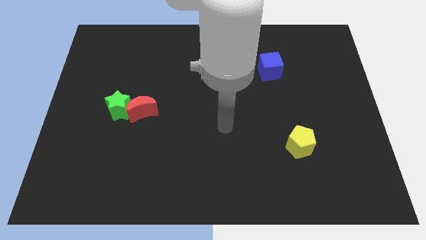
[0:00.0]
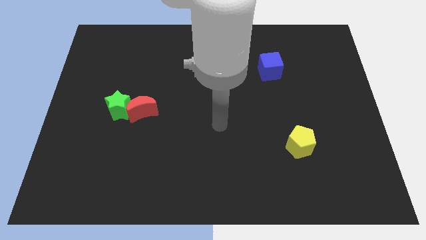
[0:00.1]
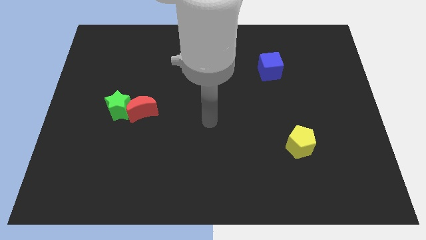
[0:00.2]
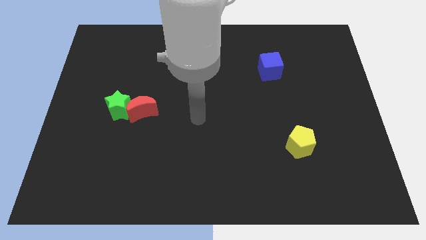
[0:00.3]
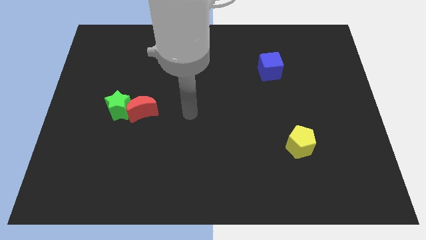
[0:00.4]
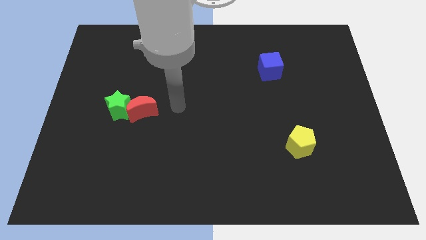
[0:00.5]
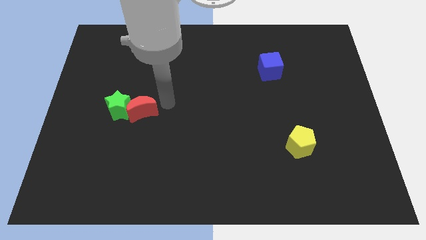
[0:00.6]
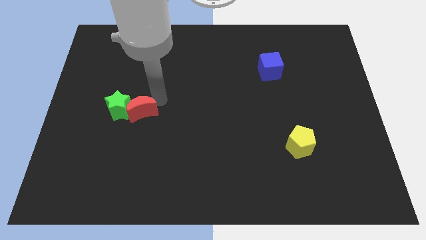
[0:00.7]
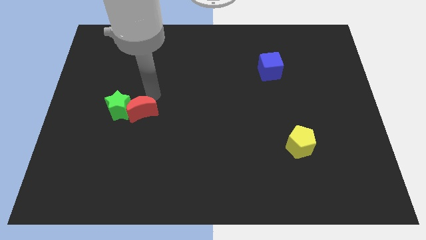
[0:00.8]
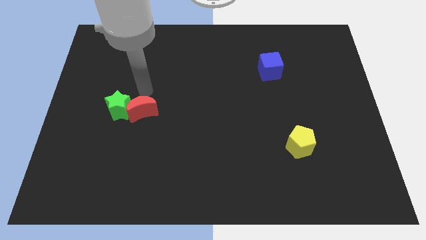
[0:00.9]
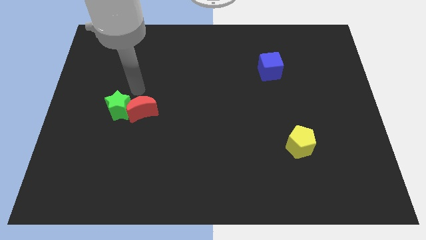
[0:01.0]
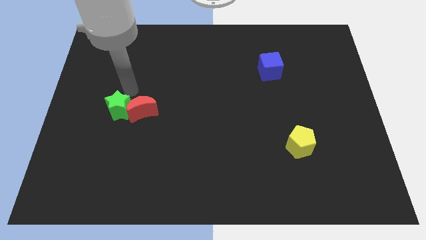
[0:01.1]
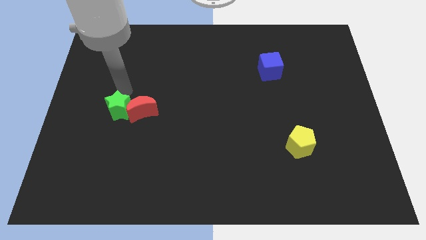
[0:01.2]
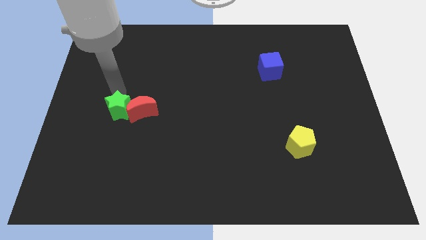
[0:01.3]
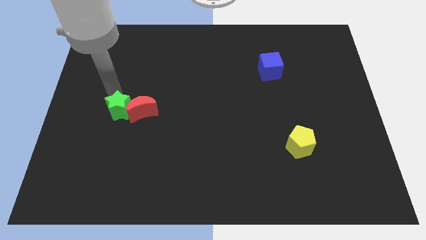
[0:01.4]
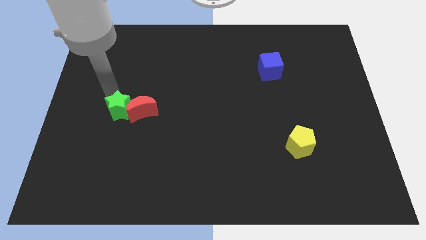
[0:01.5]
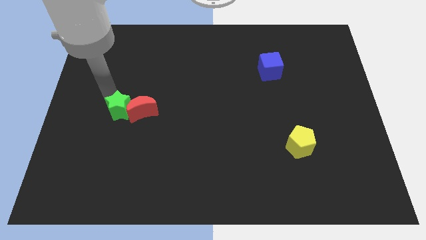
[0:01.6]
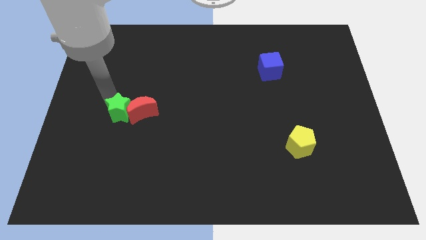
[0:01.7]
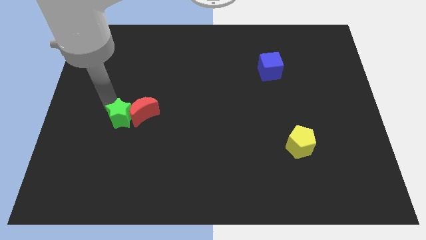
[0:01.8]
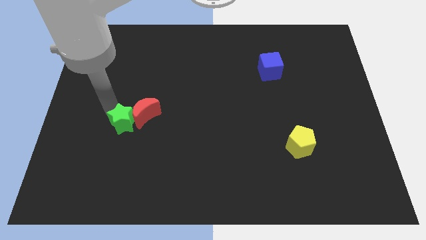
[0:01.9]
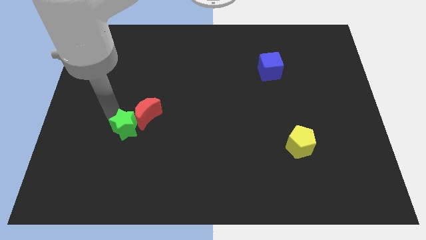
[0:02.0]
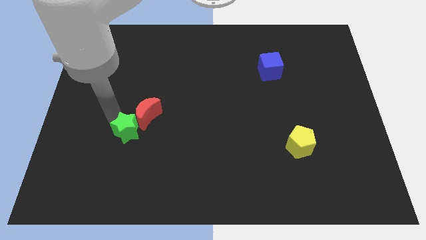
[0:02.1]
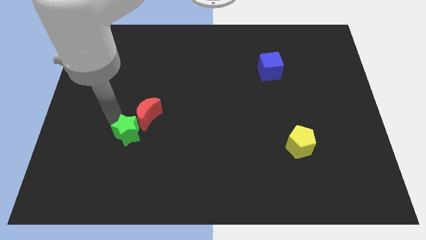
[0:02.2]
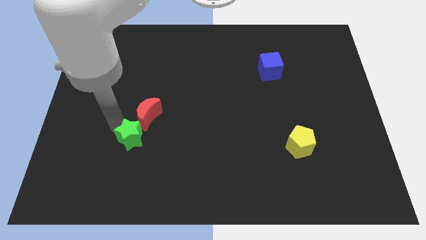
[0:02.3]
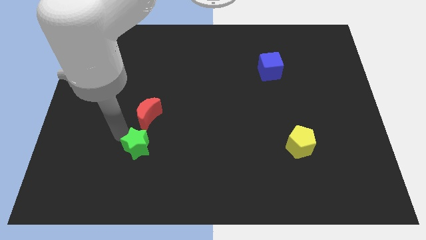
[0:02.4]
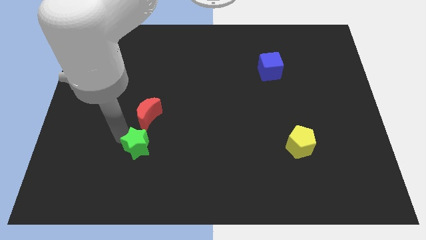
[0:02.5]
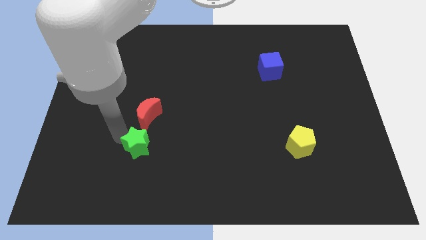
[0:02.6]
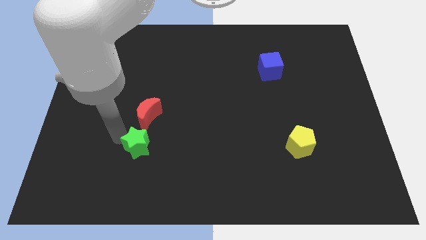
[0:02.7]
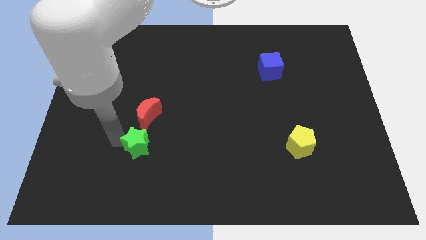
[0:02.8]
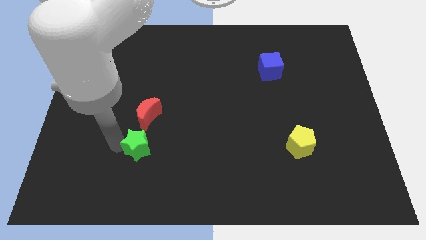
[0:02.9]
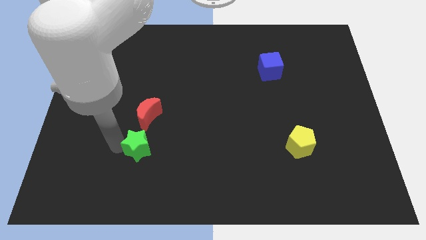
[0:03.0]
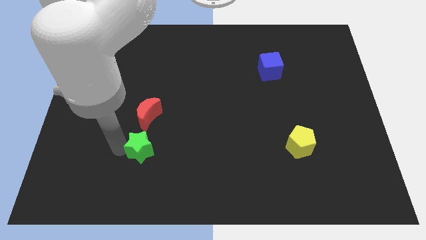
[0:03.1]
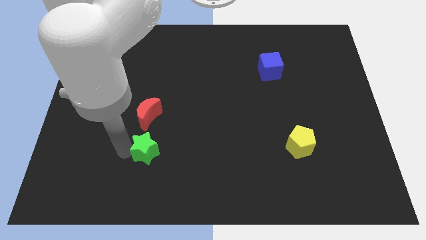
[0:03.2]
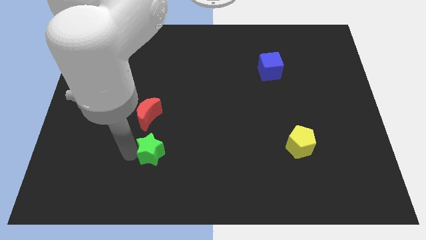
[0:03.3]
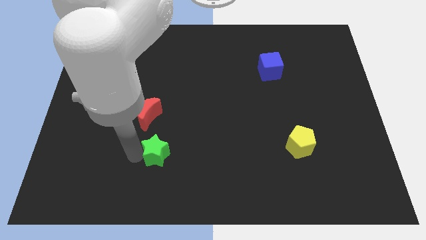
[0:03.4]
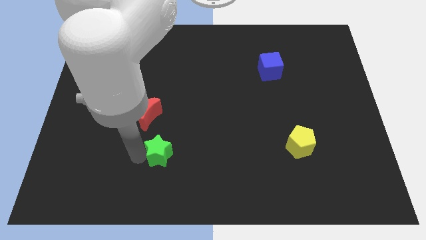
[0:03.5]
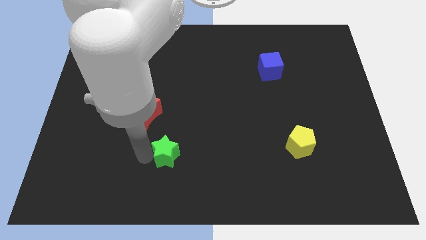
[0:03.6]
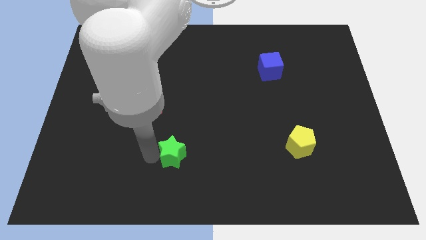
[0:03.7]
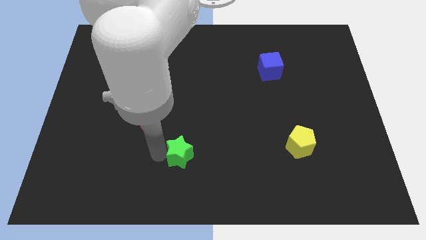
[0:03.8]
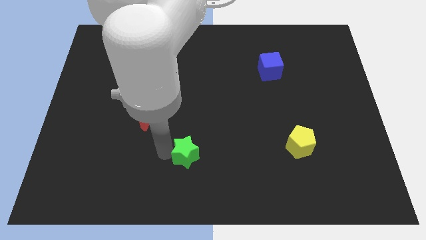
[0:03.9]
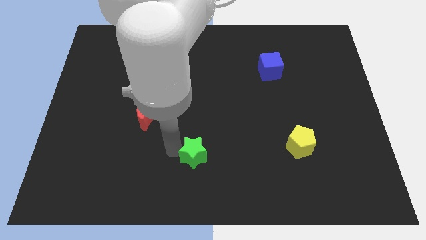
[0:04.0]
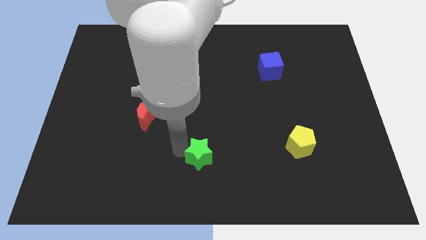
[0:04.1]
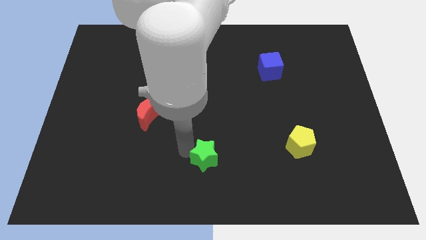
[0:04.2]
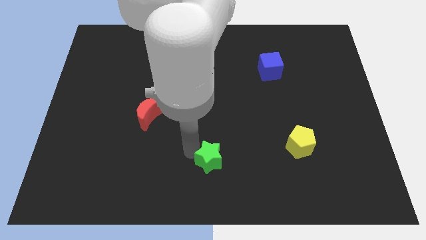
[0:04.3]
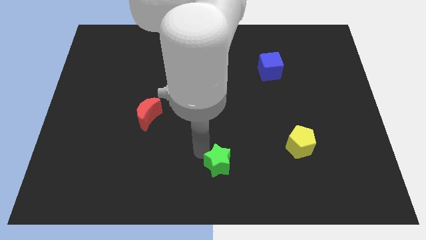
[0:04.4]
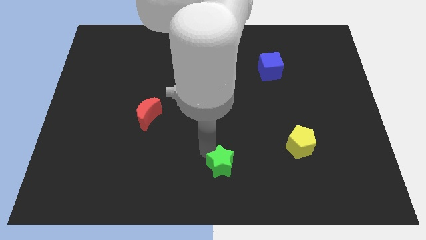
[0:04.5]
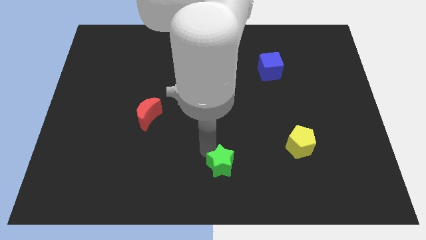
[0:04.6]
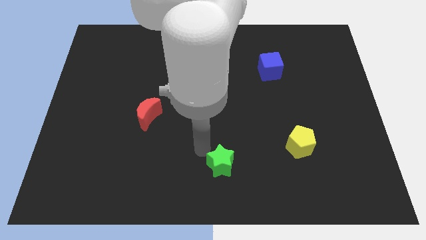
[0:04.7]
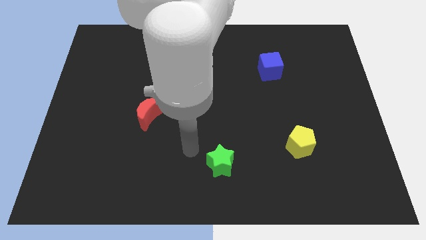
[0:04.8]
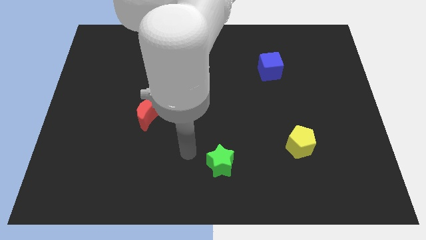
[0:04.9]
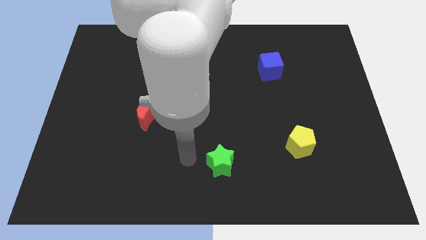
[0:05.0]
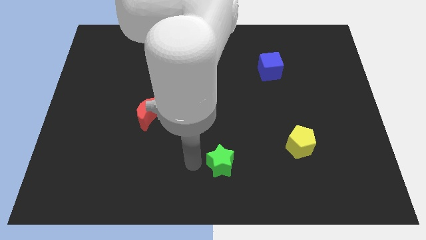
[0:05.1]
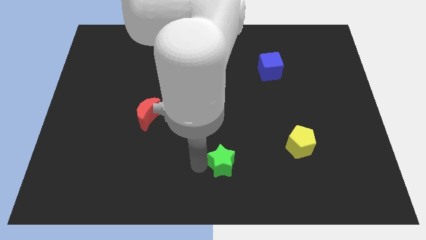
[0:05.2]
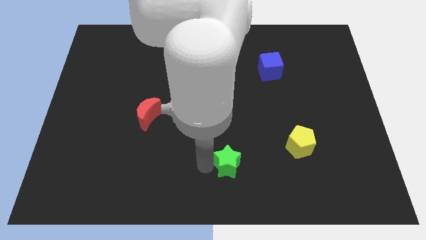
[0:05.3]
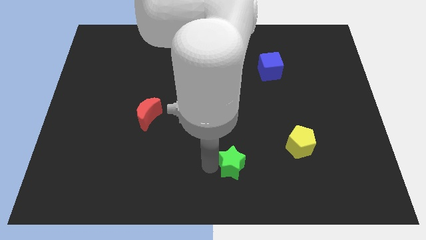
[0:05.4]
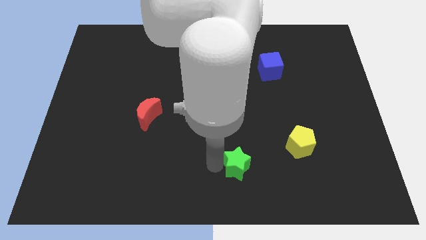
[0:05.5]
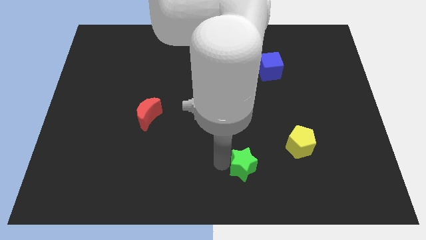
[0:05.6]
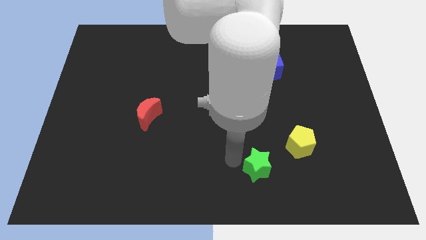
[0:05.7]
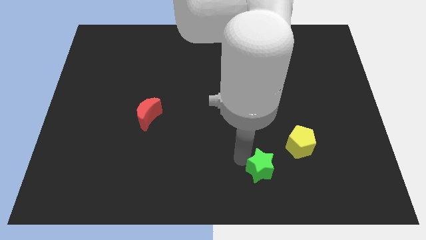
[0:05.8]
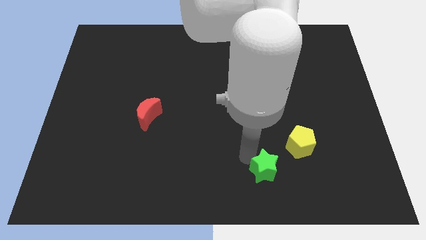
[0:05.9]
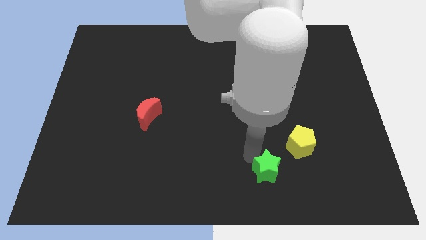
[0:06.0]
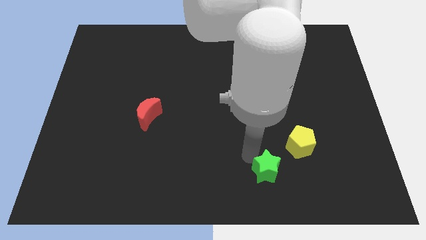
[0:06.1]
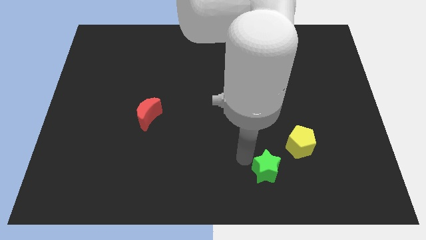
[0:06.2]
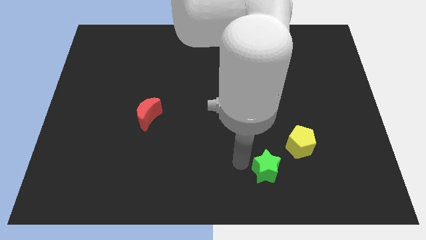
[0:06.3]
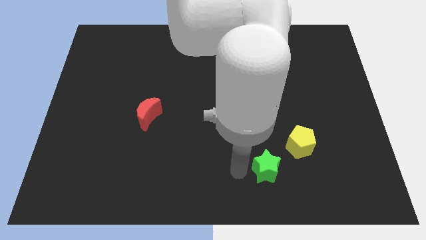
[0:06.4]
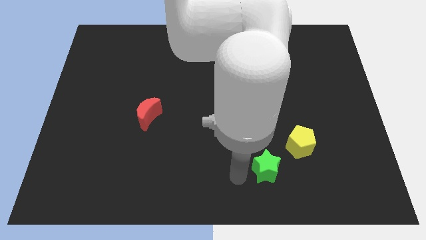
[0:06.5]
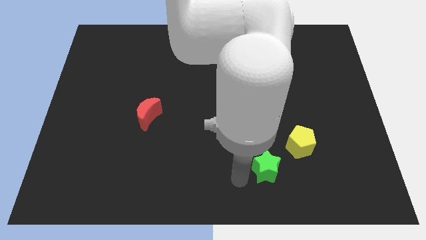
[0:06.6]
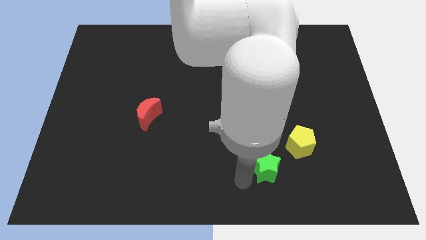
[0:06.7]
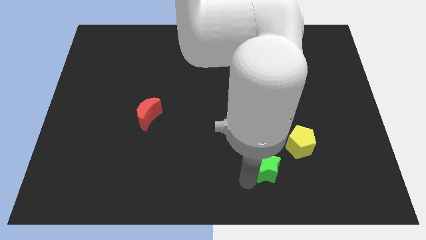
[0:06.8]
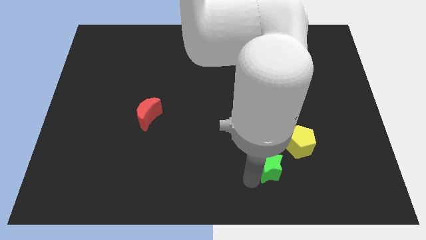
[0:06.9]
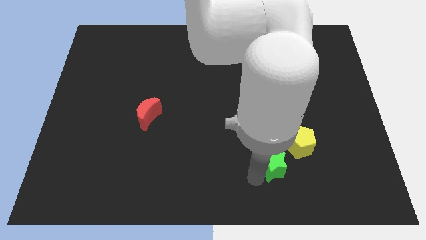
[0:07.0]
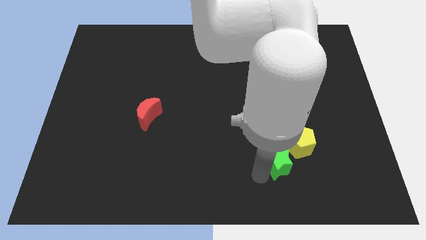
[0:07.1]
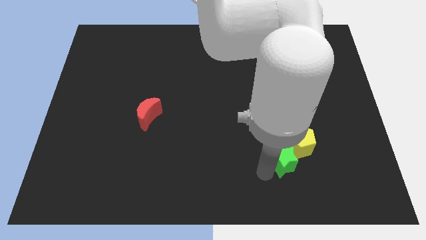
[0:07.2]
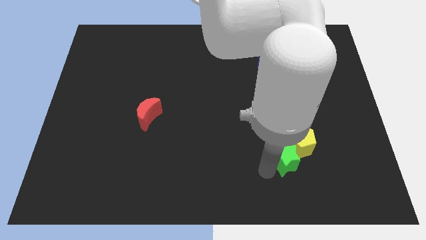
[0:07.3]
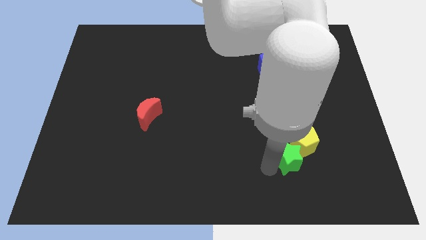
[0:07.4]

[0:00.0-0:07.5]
move the green block to the yellow pentagon

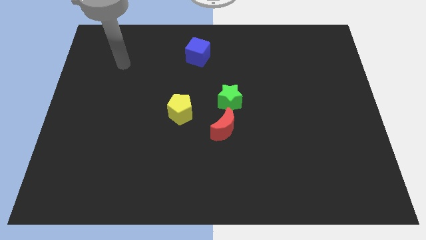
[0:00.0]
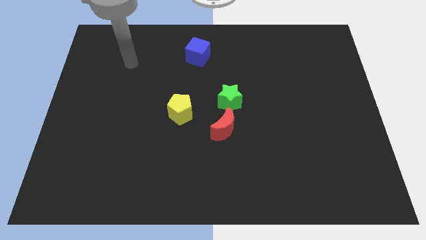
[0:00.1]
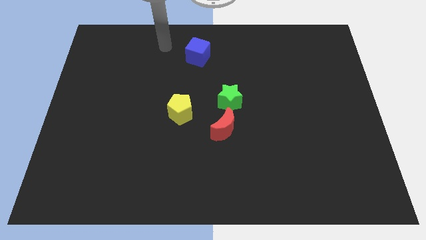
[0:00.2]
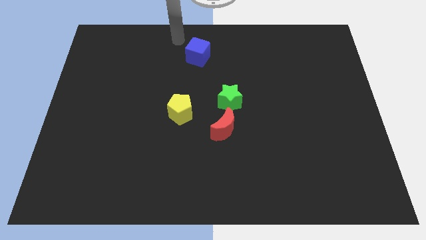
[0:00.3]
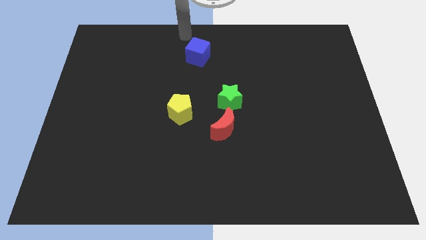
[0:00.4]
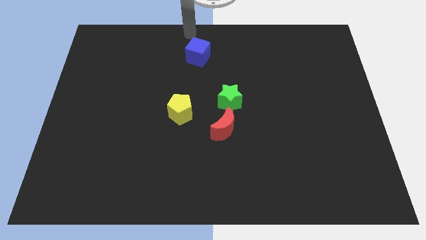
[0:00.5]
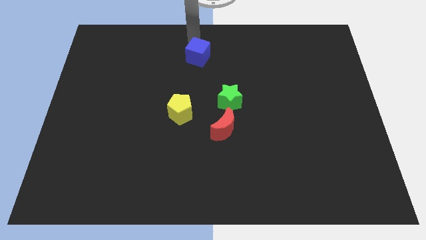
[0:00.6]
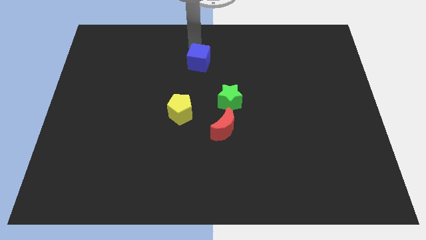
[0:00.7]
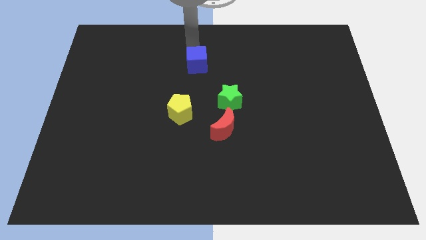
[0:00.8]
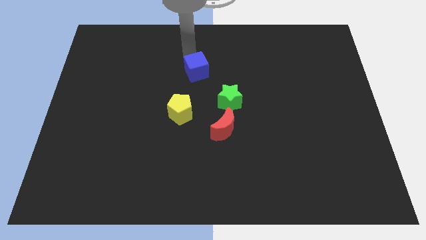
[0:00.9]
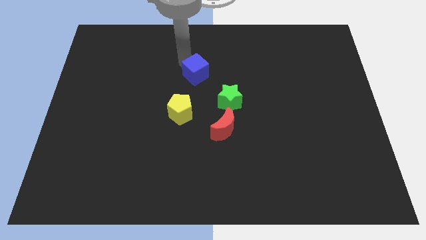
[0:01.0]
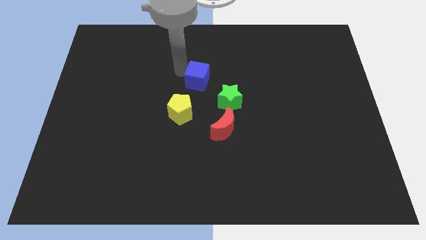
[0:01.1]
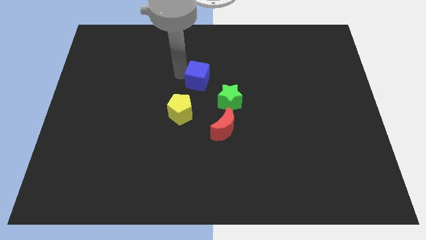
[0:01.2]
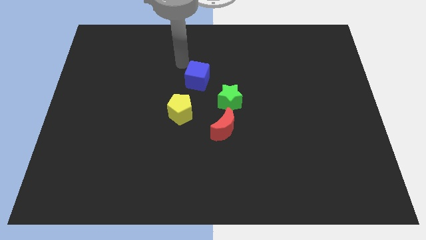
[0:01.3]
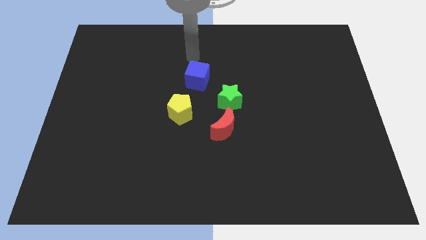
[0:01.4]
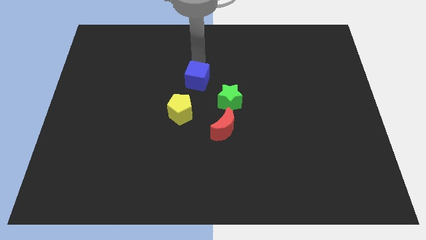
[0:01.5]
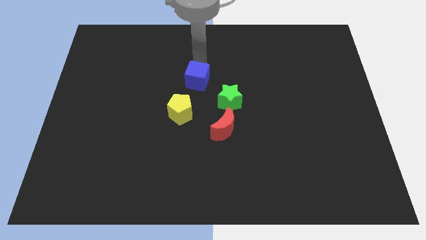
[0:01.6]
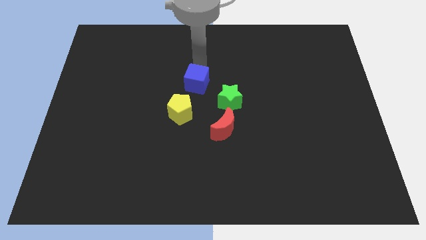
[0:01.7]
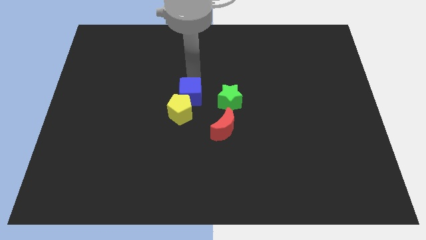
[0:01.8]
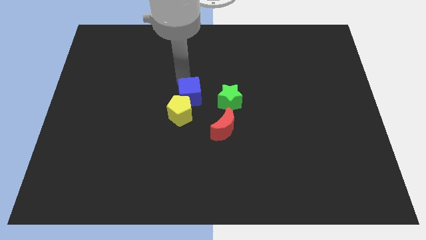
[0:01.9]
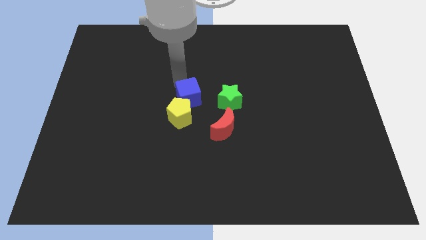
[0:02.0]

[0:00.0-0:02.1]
move the blue block close to the pentagon
